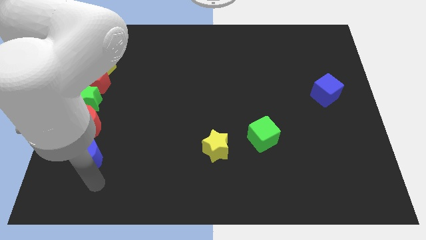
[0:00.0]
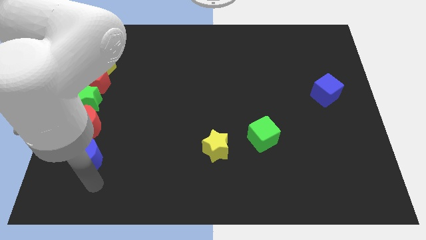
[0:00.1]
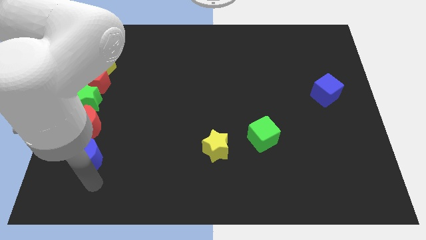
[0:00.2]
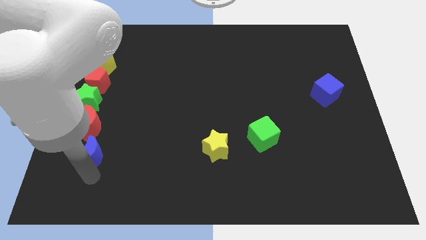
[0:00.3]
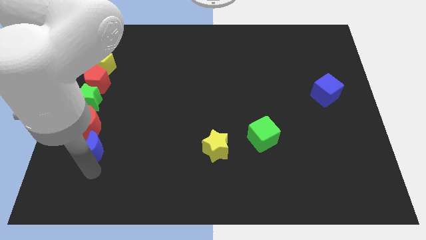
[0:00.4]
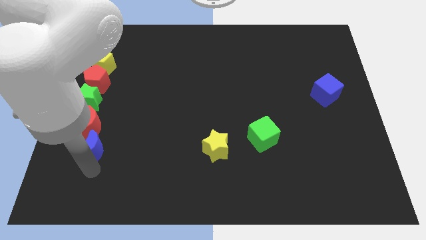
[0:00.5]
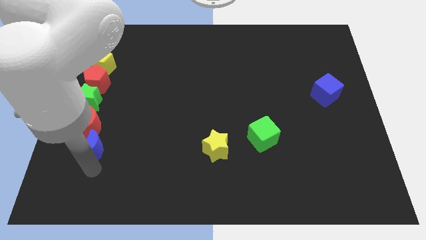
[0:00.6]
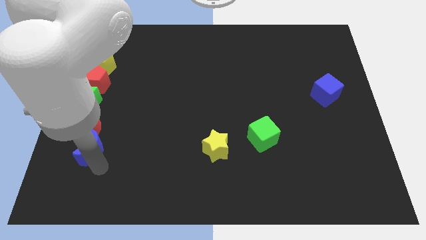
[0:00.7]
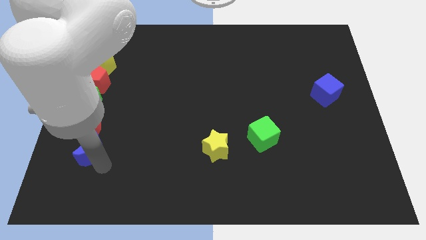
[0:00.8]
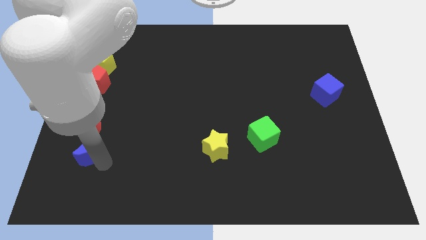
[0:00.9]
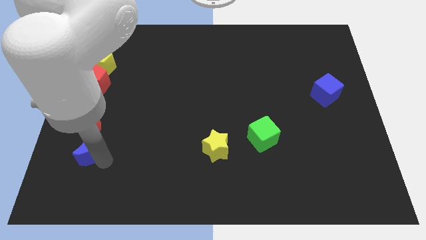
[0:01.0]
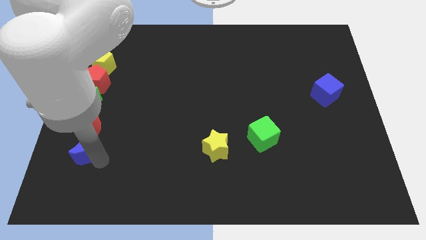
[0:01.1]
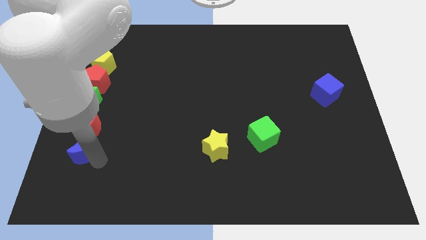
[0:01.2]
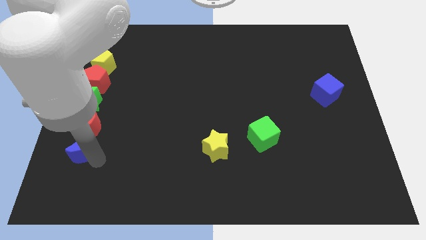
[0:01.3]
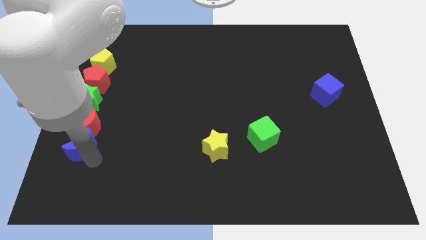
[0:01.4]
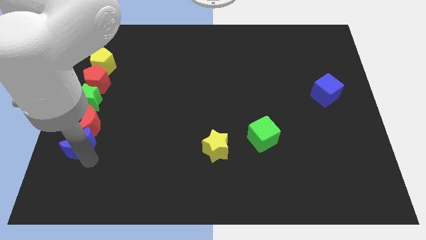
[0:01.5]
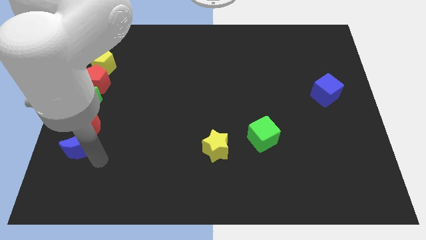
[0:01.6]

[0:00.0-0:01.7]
push the blue moon to the bottom of the red moon

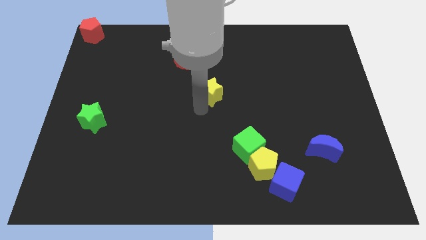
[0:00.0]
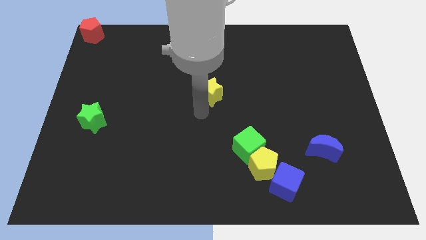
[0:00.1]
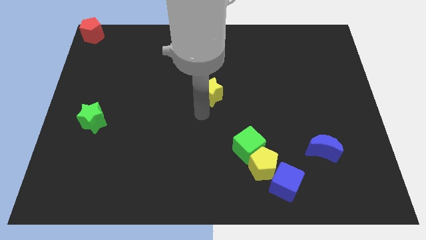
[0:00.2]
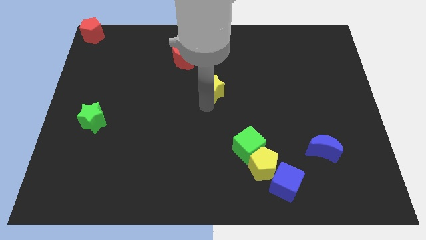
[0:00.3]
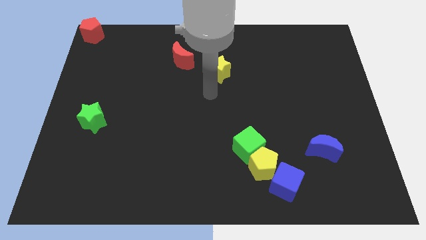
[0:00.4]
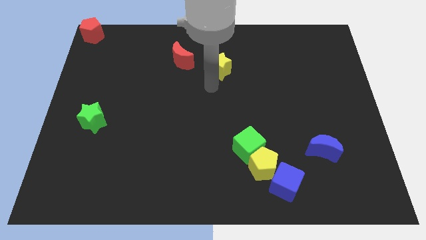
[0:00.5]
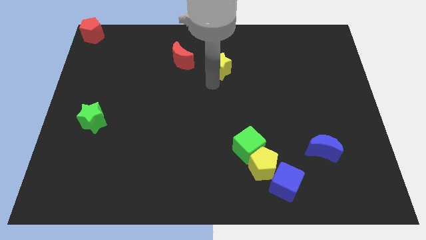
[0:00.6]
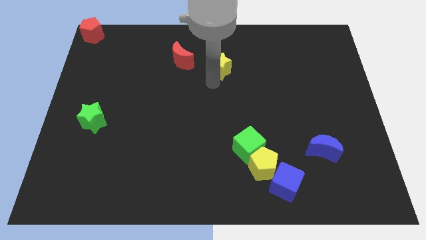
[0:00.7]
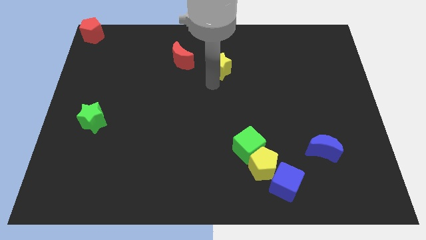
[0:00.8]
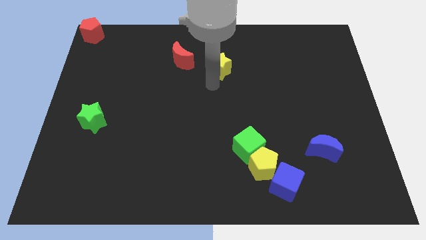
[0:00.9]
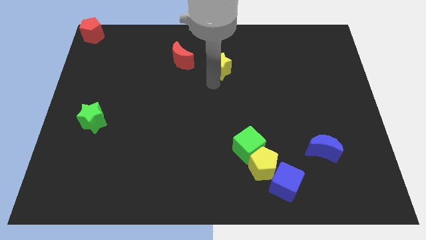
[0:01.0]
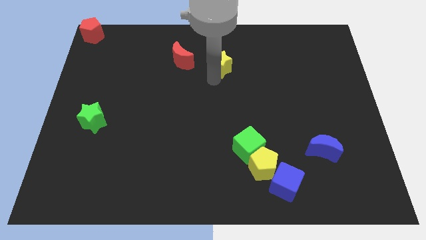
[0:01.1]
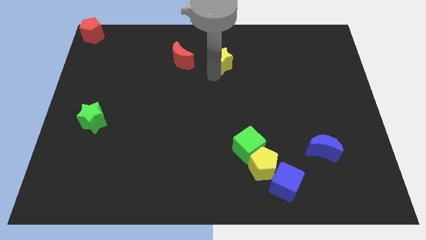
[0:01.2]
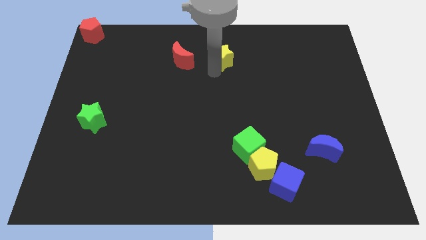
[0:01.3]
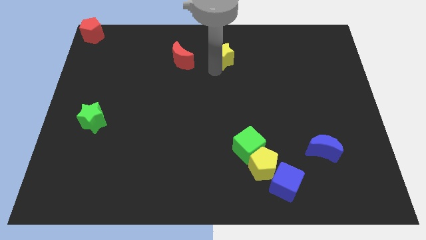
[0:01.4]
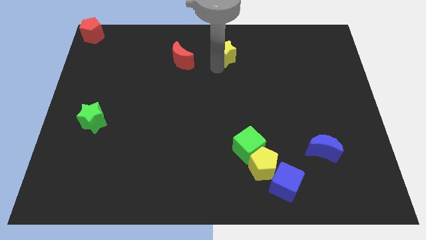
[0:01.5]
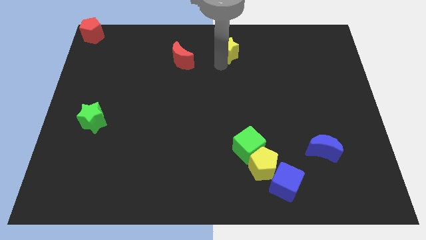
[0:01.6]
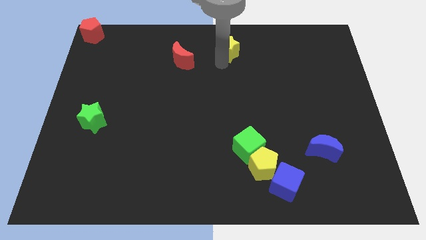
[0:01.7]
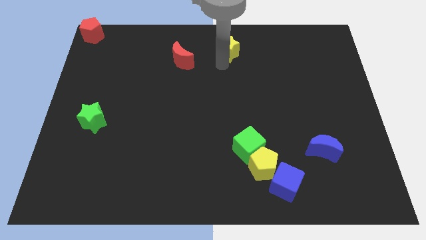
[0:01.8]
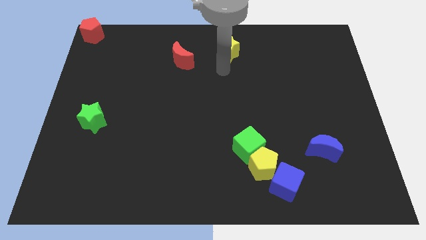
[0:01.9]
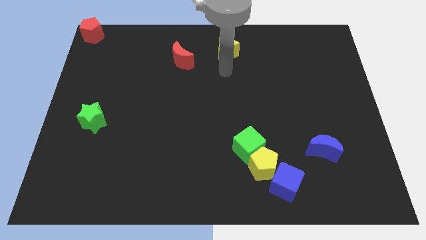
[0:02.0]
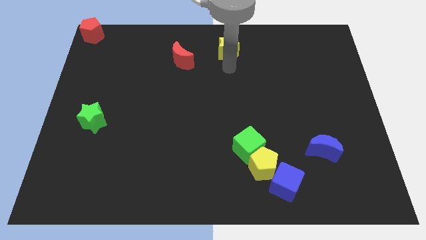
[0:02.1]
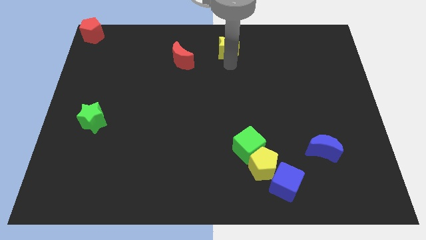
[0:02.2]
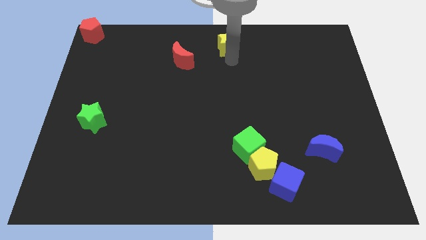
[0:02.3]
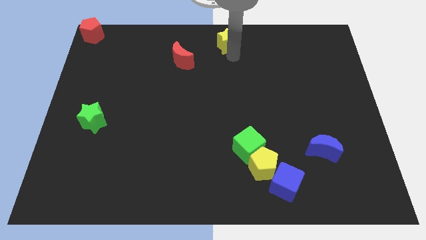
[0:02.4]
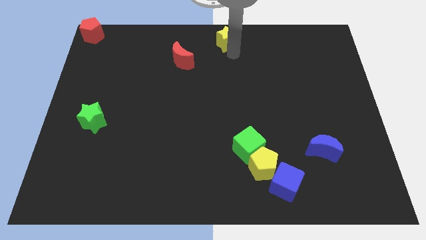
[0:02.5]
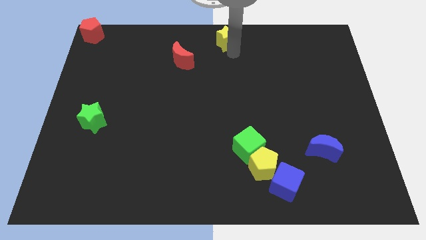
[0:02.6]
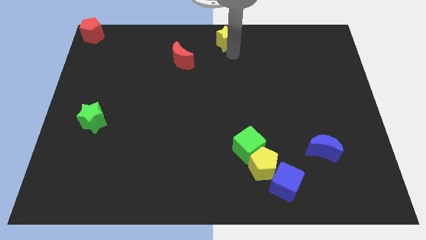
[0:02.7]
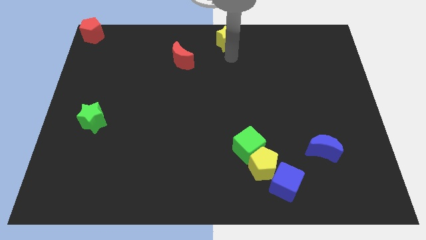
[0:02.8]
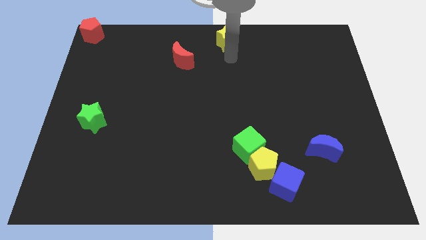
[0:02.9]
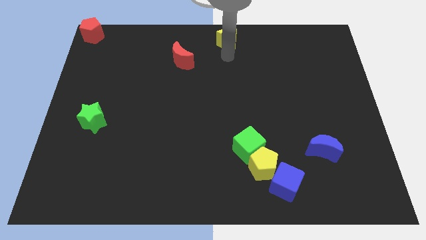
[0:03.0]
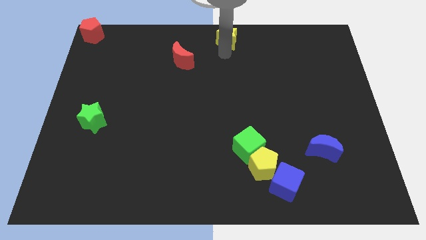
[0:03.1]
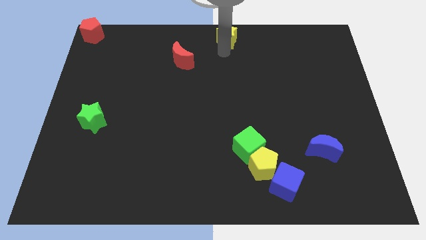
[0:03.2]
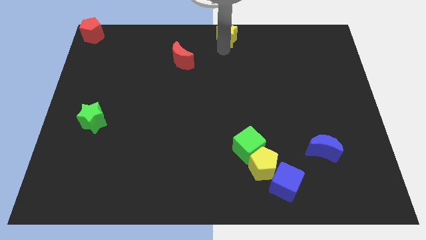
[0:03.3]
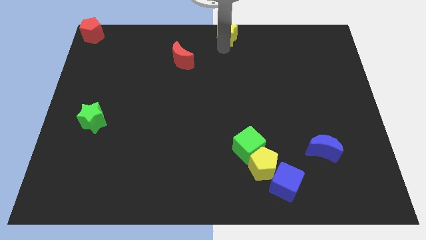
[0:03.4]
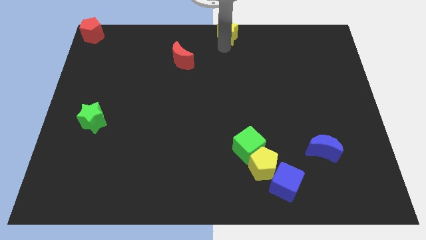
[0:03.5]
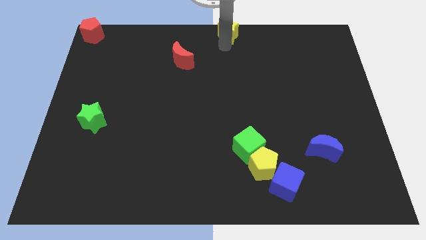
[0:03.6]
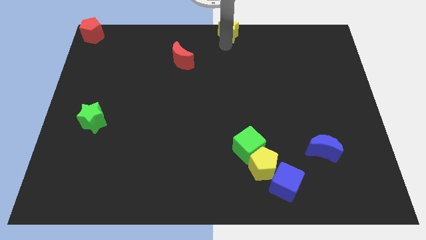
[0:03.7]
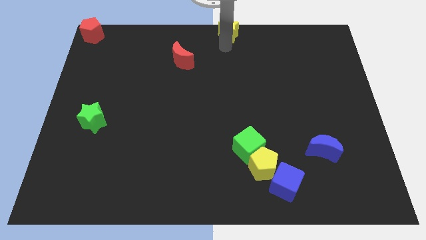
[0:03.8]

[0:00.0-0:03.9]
move the yellow star to the top center of the board

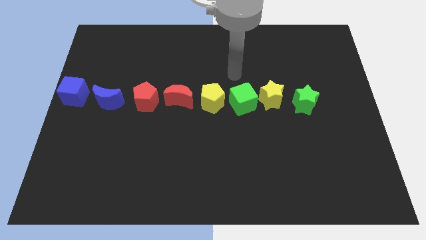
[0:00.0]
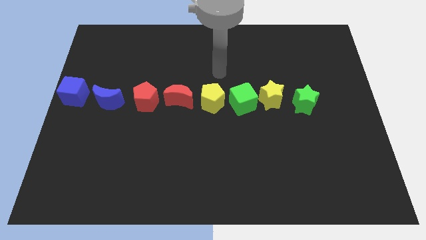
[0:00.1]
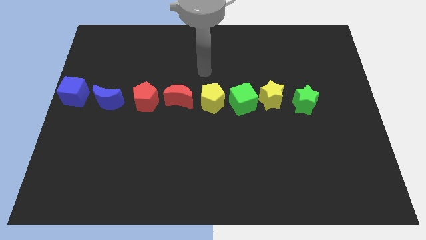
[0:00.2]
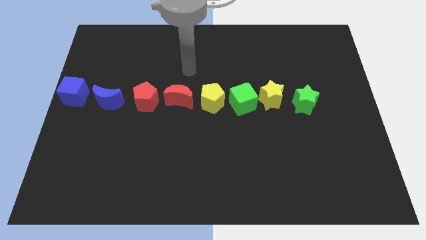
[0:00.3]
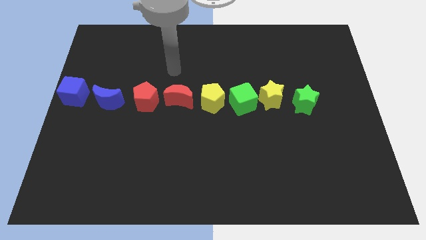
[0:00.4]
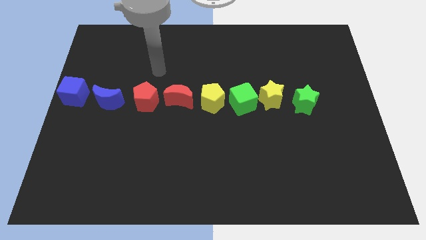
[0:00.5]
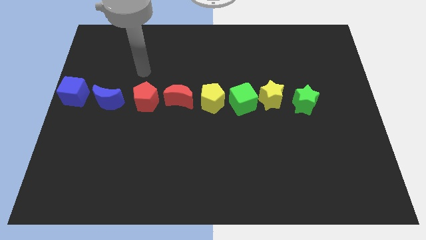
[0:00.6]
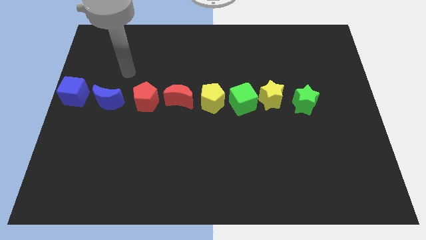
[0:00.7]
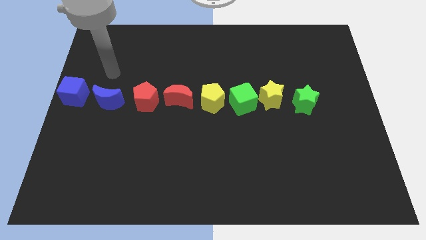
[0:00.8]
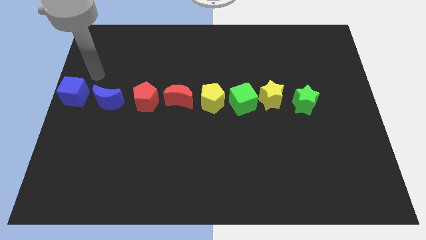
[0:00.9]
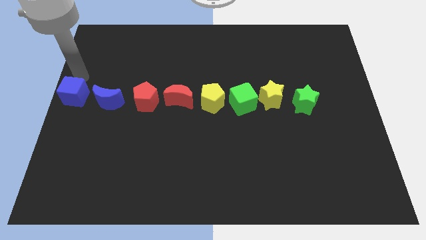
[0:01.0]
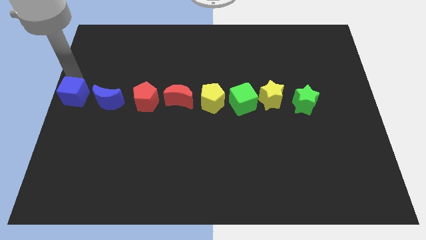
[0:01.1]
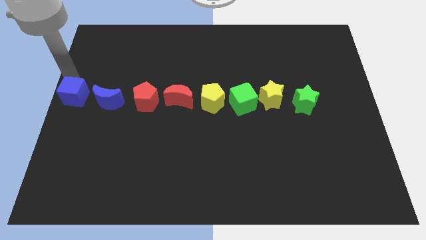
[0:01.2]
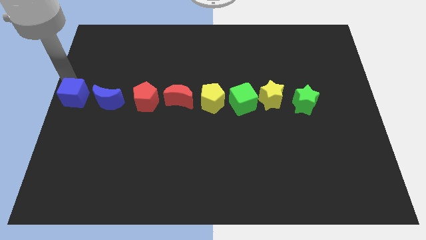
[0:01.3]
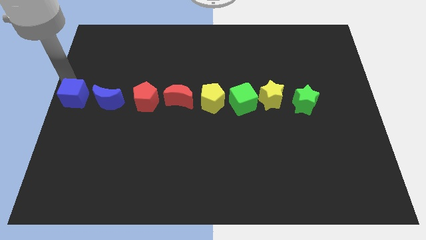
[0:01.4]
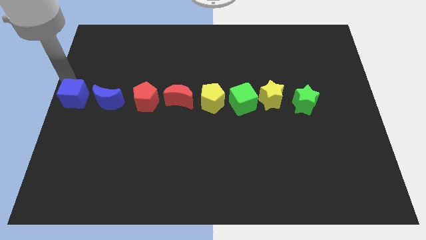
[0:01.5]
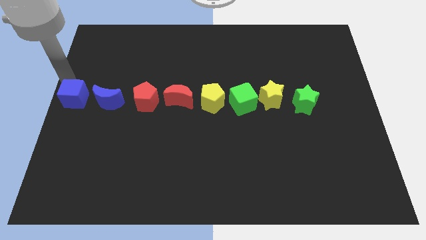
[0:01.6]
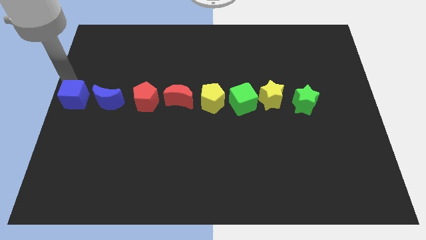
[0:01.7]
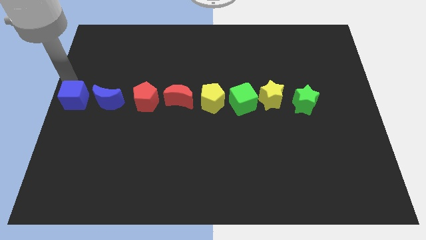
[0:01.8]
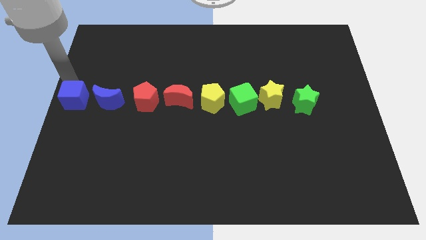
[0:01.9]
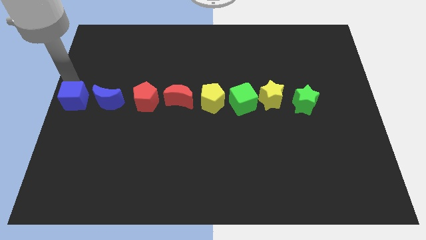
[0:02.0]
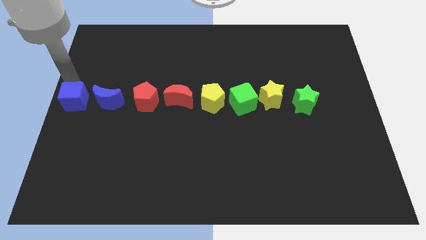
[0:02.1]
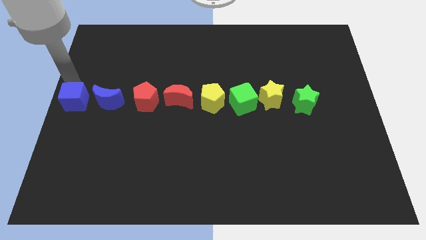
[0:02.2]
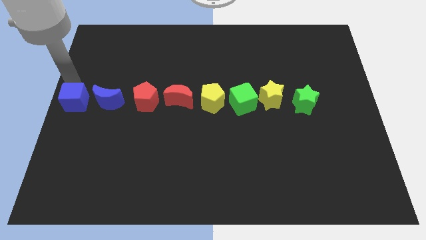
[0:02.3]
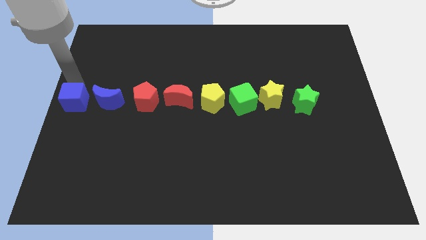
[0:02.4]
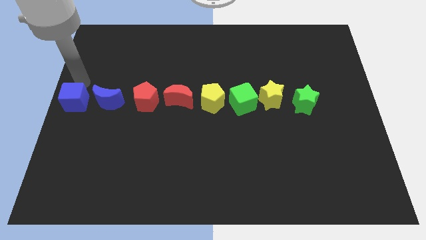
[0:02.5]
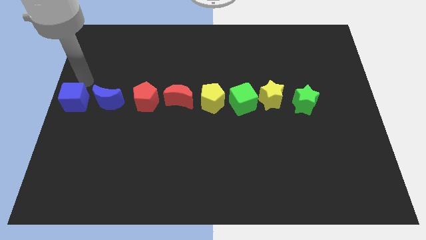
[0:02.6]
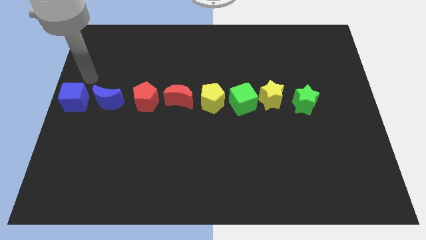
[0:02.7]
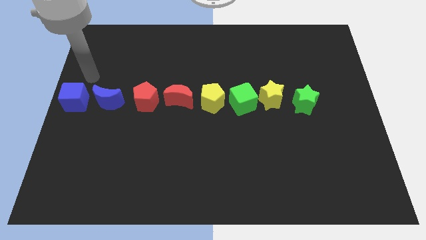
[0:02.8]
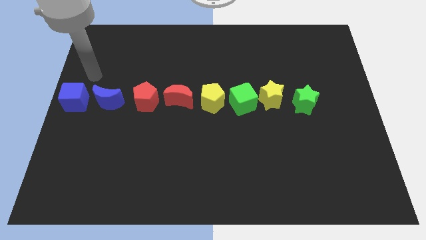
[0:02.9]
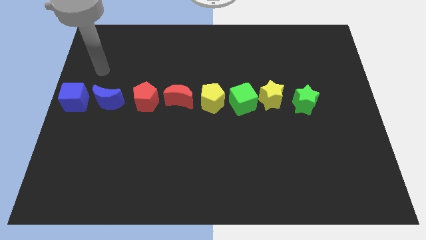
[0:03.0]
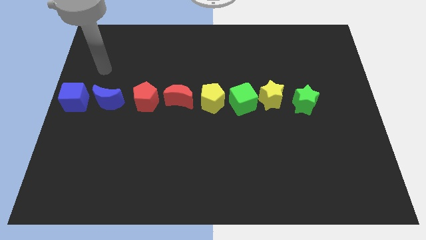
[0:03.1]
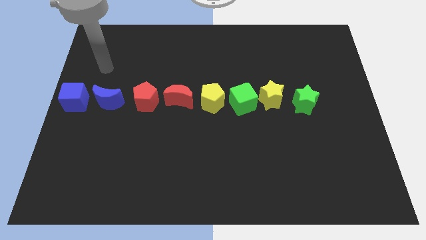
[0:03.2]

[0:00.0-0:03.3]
adjust the blue cube slightly to the left side of the blue crescent

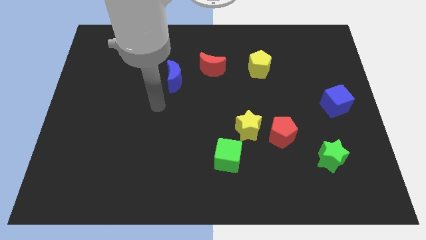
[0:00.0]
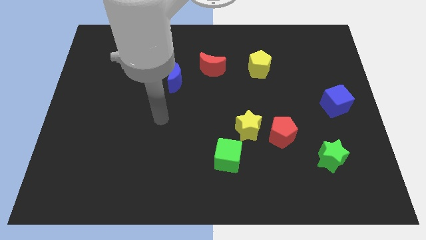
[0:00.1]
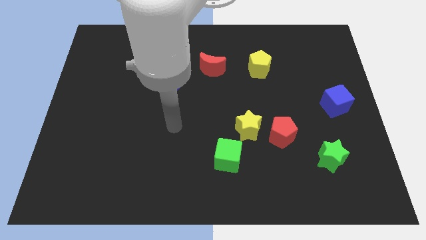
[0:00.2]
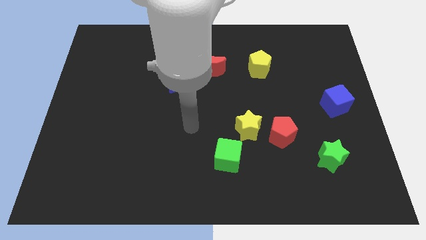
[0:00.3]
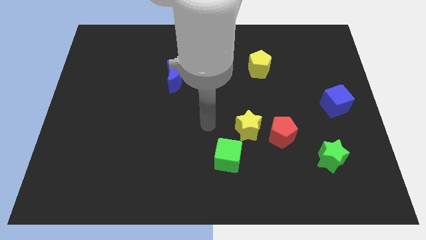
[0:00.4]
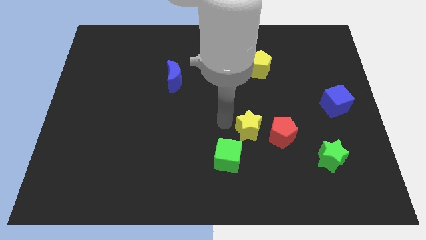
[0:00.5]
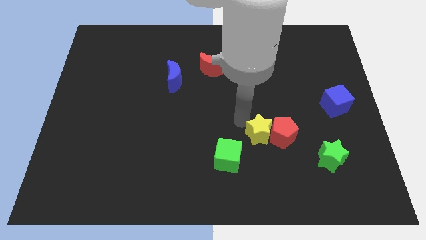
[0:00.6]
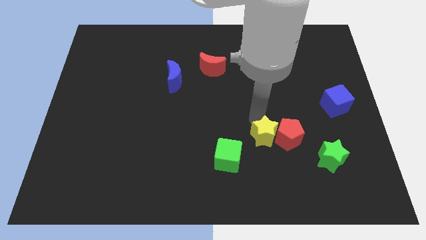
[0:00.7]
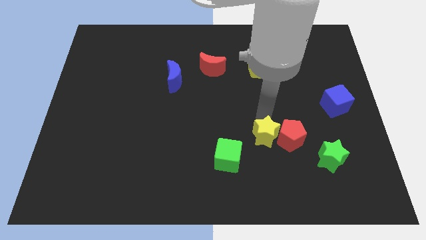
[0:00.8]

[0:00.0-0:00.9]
push the yellow star into the red pentagon
